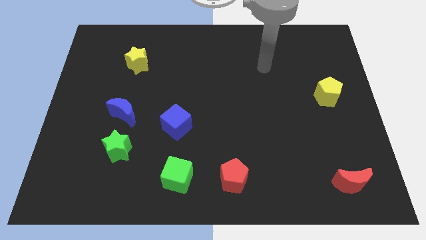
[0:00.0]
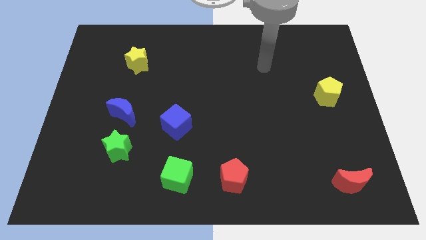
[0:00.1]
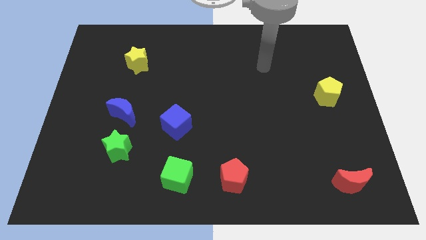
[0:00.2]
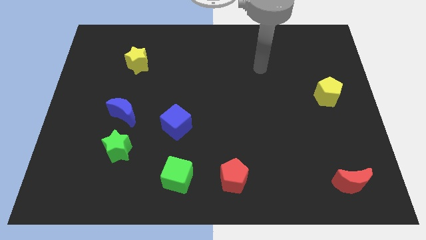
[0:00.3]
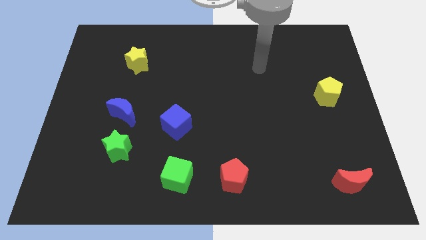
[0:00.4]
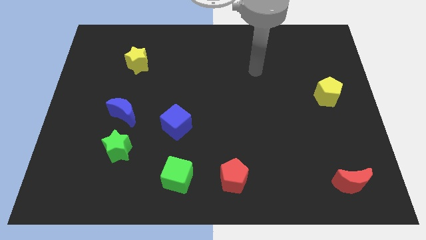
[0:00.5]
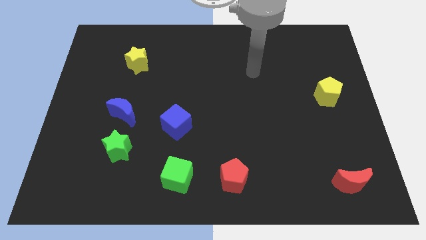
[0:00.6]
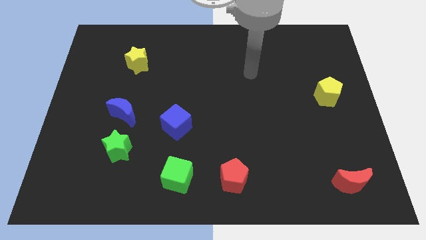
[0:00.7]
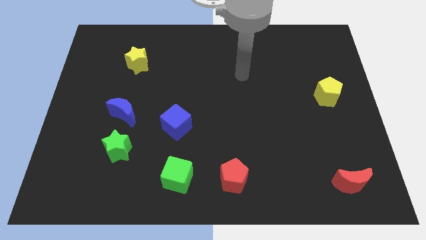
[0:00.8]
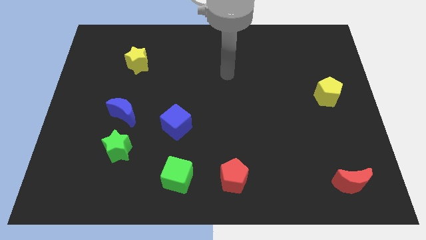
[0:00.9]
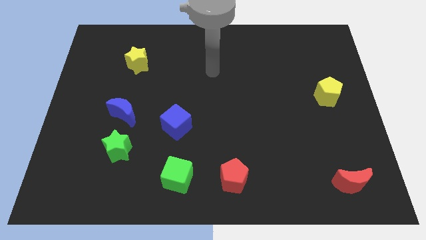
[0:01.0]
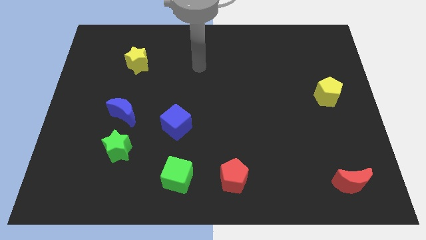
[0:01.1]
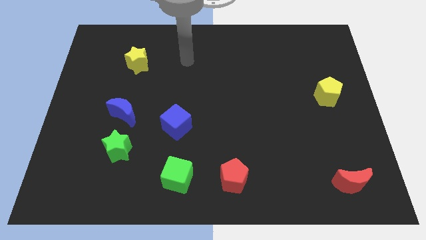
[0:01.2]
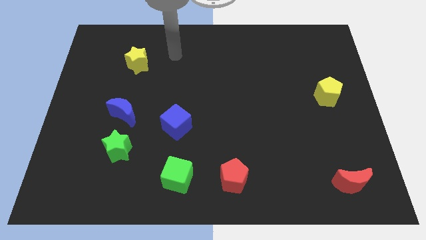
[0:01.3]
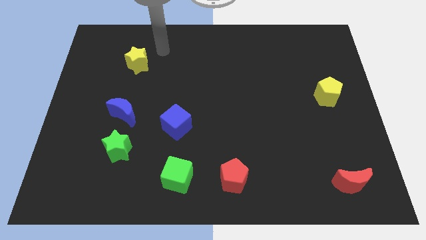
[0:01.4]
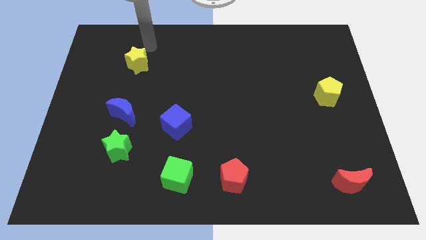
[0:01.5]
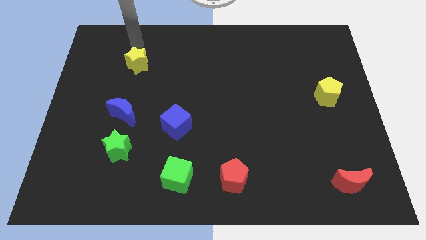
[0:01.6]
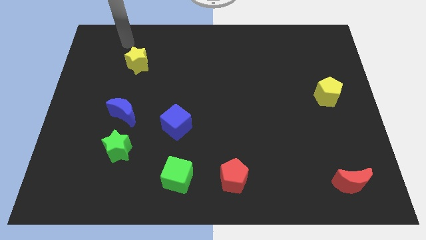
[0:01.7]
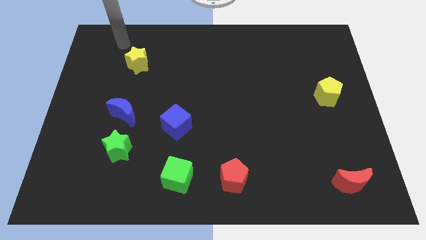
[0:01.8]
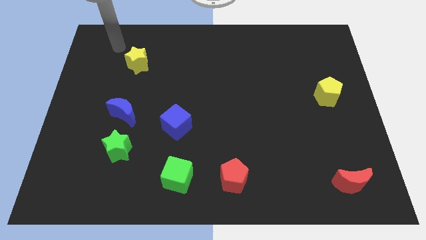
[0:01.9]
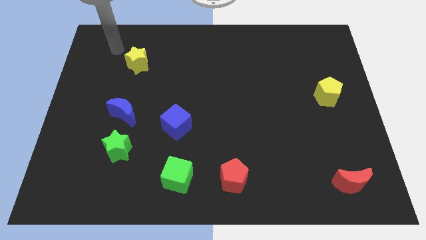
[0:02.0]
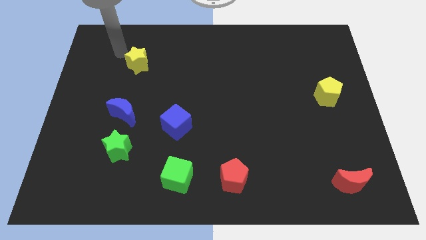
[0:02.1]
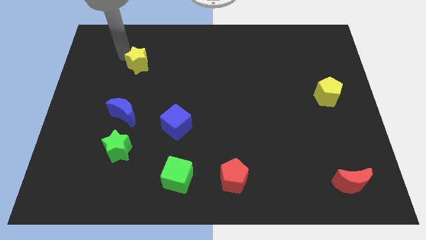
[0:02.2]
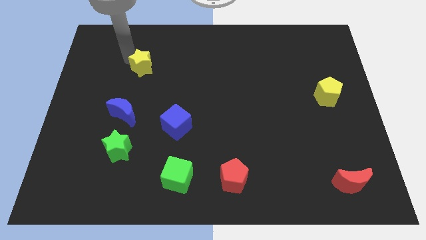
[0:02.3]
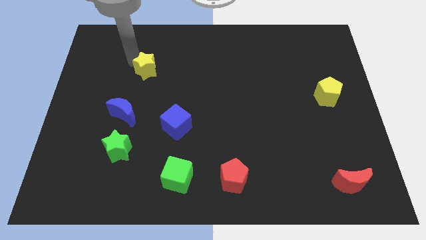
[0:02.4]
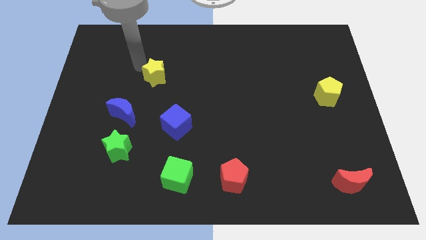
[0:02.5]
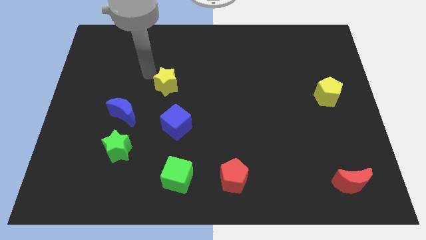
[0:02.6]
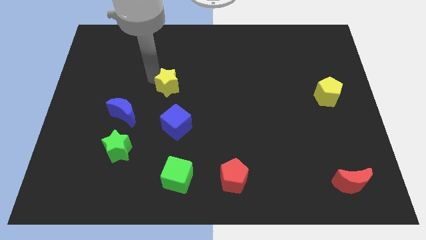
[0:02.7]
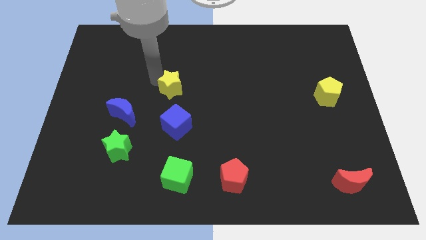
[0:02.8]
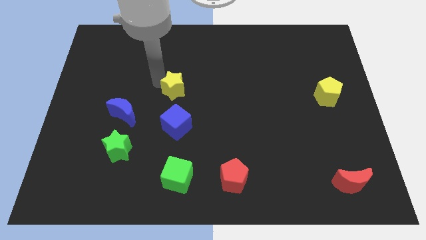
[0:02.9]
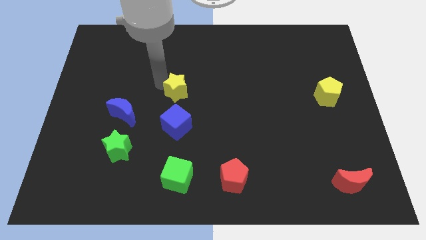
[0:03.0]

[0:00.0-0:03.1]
move the yellow star towards the top side of the blue cube

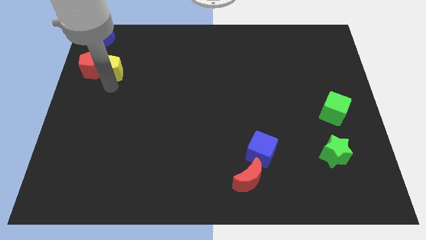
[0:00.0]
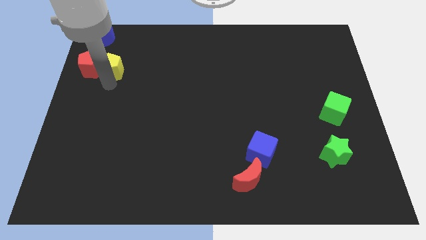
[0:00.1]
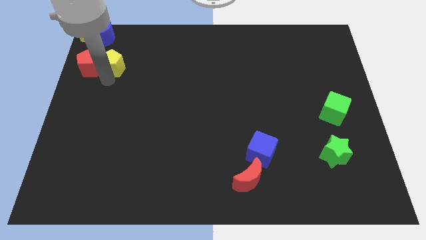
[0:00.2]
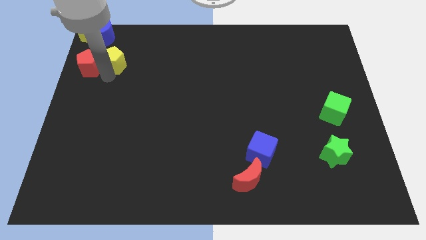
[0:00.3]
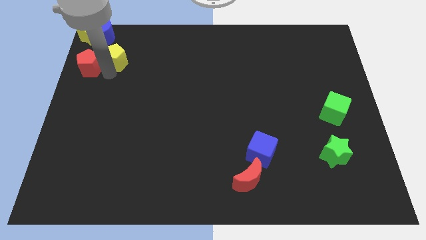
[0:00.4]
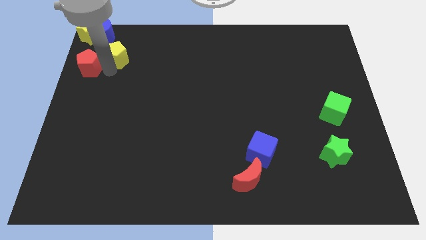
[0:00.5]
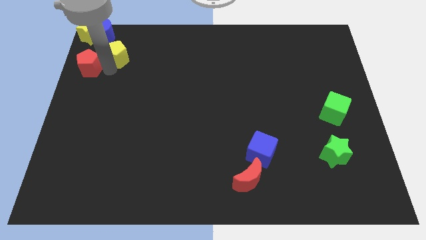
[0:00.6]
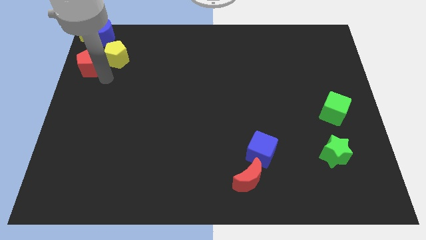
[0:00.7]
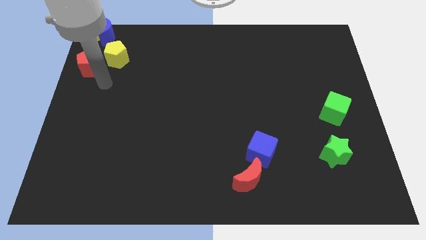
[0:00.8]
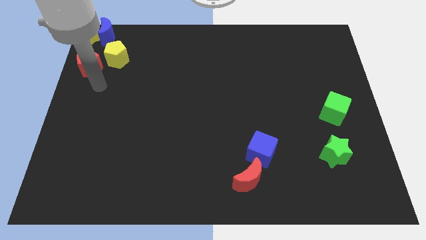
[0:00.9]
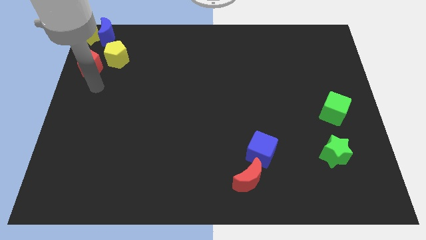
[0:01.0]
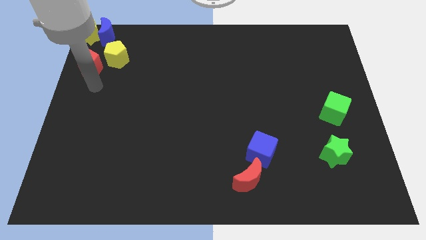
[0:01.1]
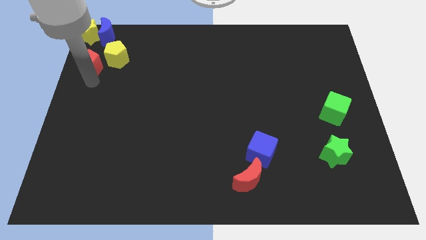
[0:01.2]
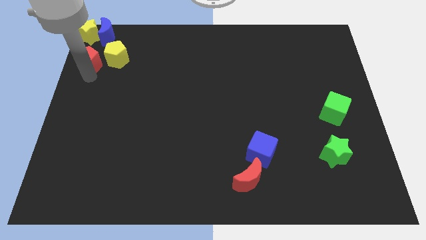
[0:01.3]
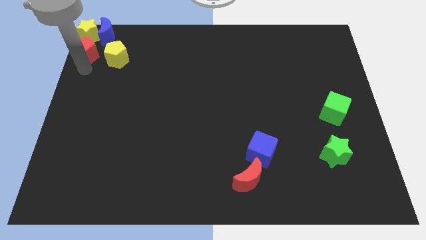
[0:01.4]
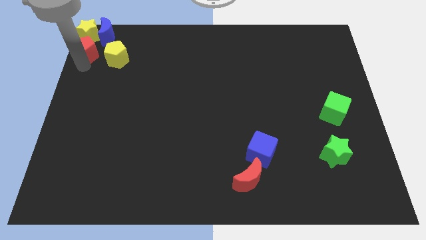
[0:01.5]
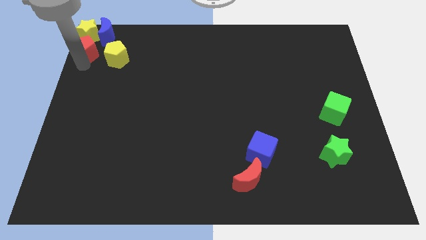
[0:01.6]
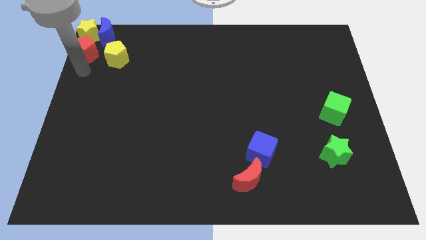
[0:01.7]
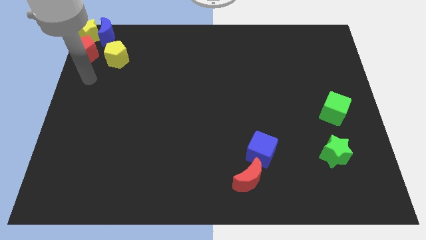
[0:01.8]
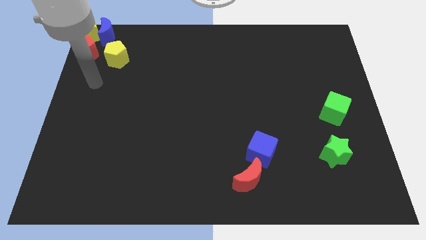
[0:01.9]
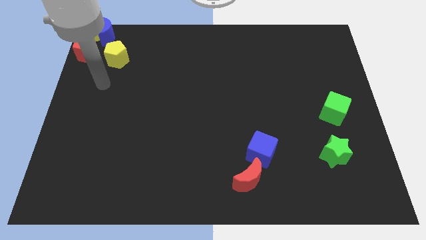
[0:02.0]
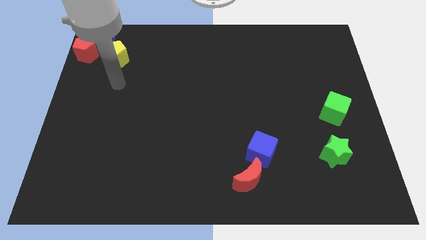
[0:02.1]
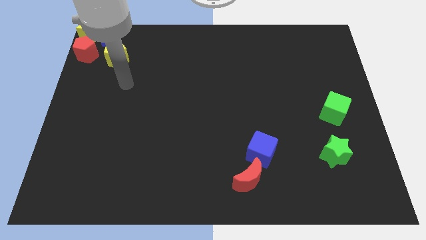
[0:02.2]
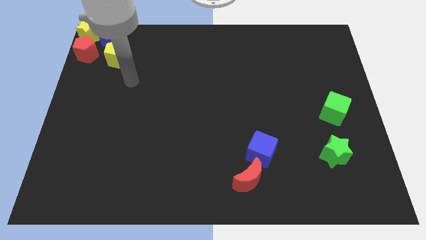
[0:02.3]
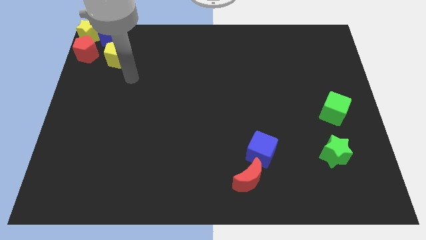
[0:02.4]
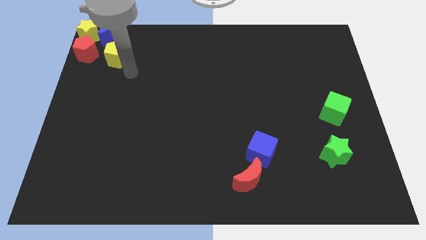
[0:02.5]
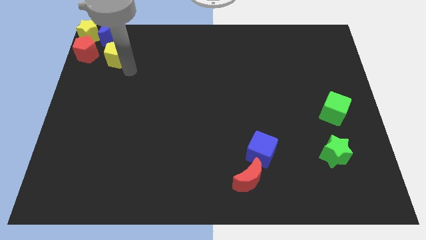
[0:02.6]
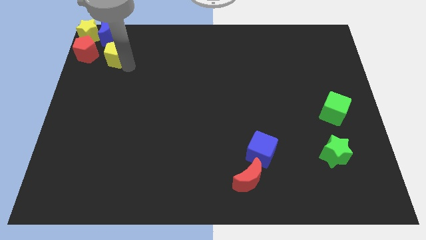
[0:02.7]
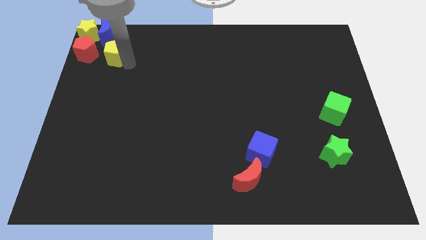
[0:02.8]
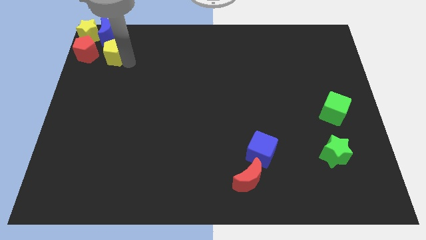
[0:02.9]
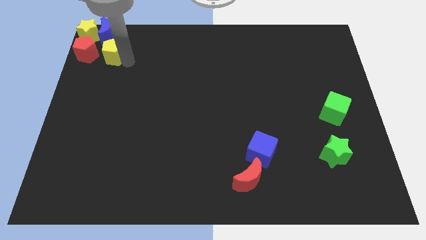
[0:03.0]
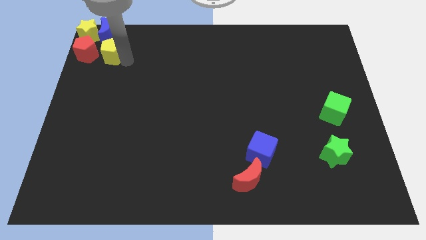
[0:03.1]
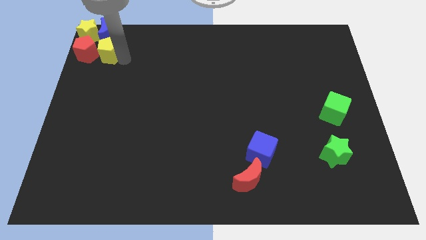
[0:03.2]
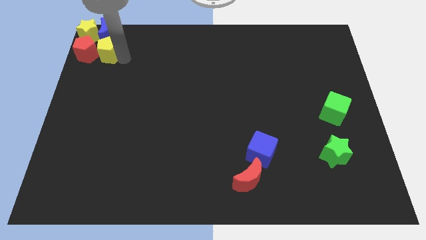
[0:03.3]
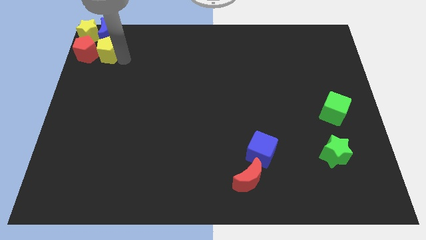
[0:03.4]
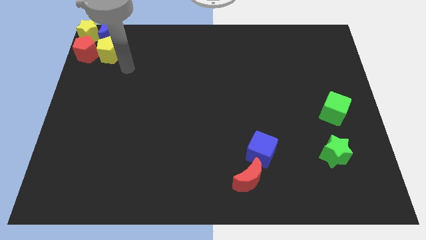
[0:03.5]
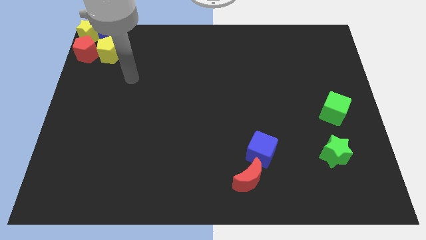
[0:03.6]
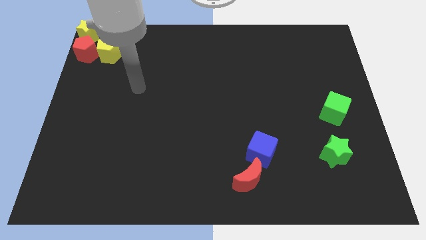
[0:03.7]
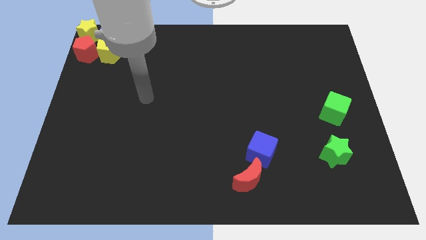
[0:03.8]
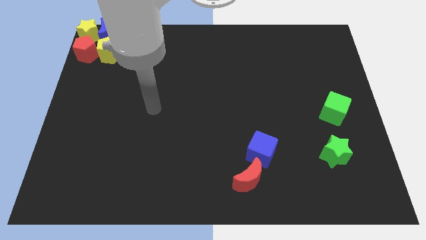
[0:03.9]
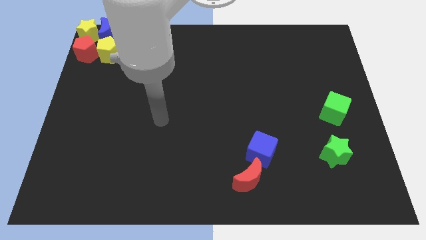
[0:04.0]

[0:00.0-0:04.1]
push yellow and red pentagons towards top left

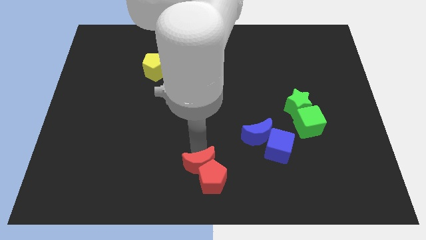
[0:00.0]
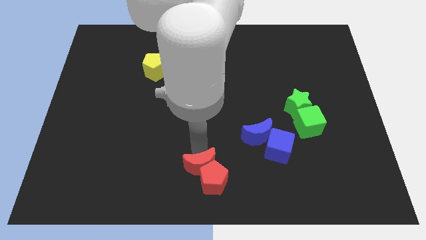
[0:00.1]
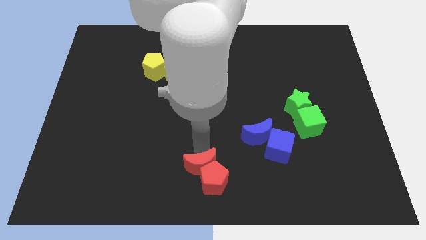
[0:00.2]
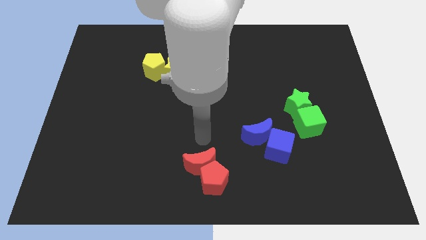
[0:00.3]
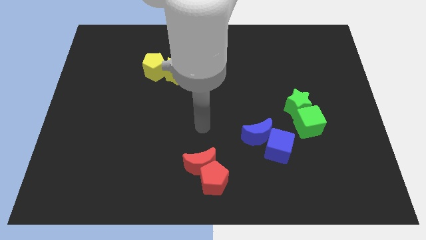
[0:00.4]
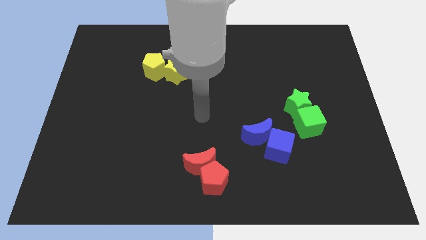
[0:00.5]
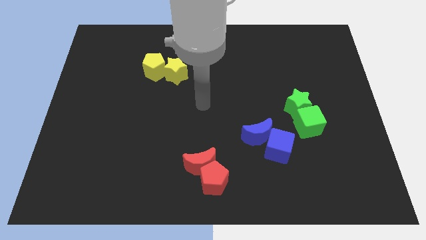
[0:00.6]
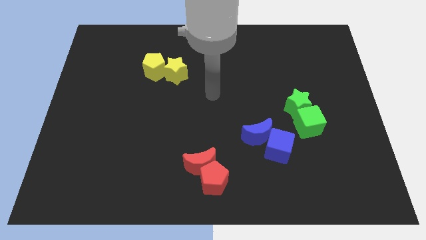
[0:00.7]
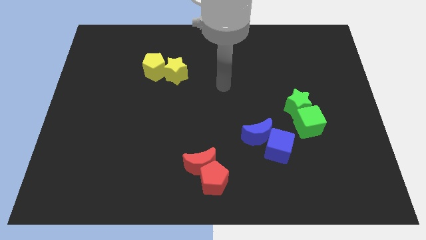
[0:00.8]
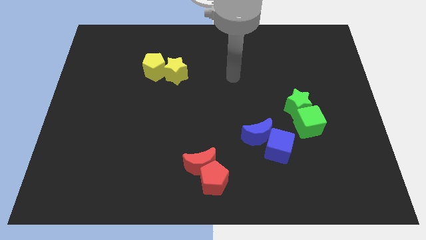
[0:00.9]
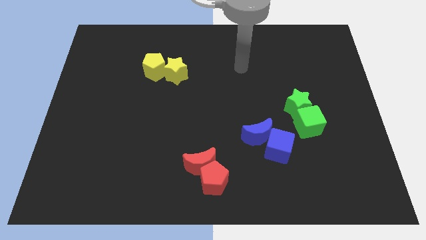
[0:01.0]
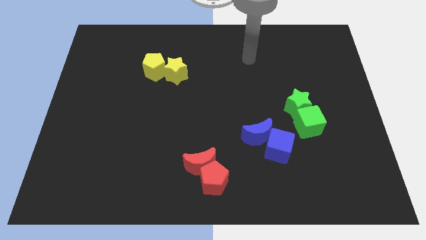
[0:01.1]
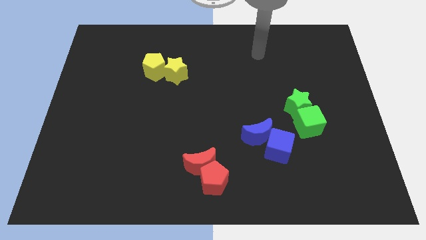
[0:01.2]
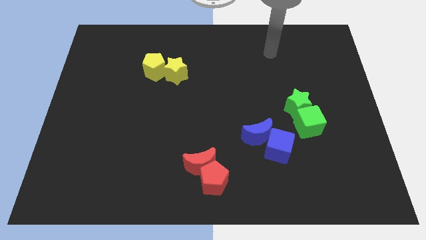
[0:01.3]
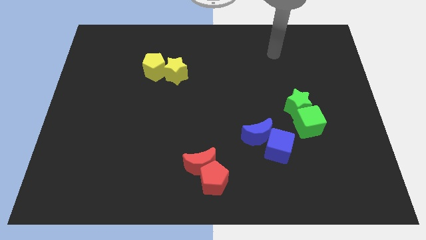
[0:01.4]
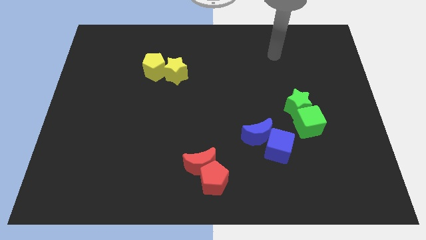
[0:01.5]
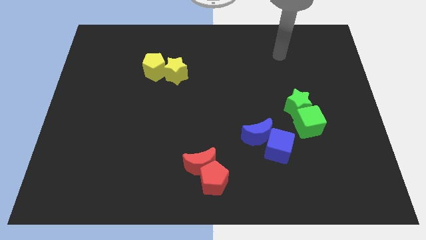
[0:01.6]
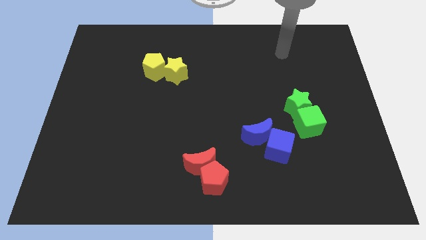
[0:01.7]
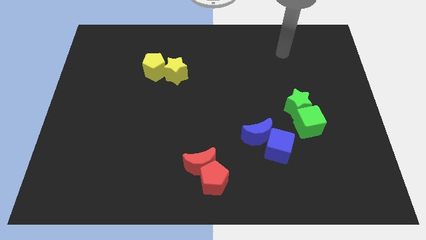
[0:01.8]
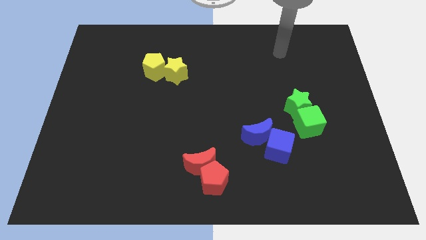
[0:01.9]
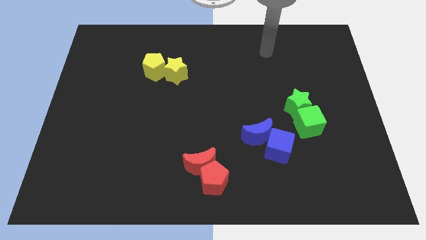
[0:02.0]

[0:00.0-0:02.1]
move away from red moon
